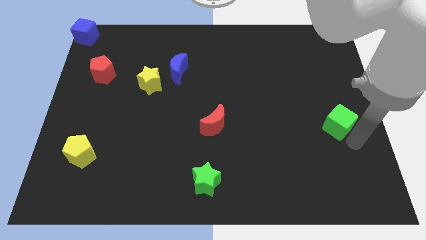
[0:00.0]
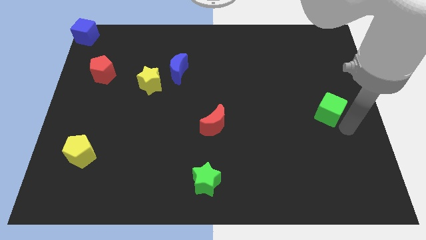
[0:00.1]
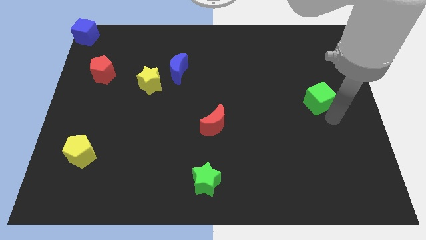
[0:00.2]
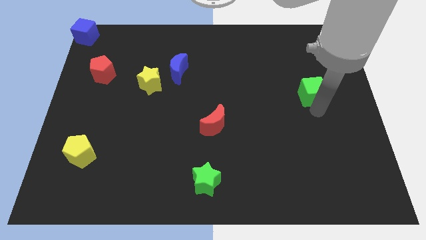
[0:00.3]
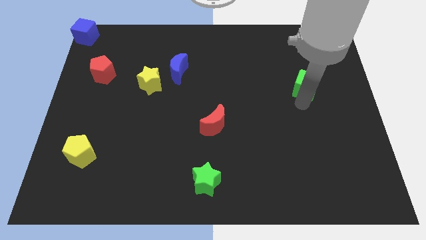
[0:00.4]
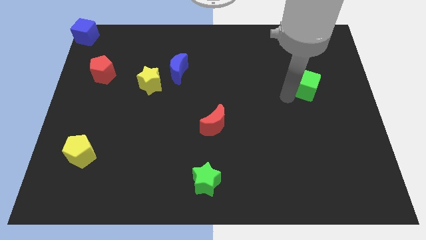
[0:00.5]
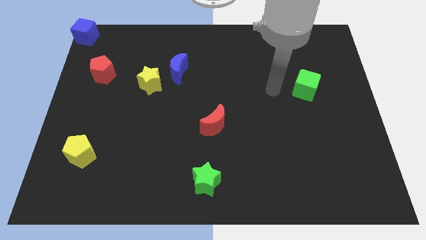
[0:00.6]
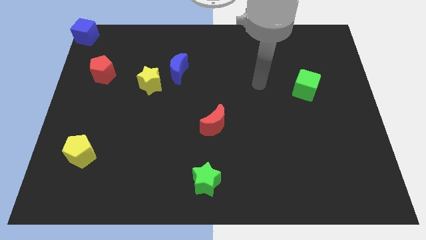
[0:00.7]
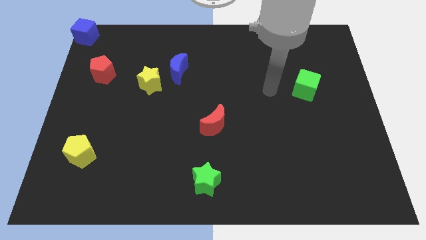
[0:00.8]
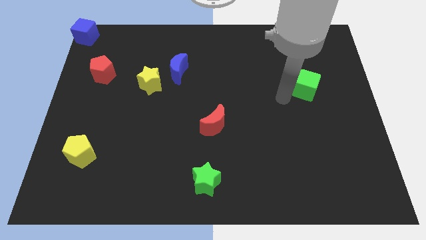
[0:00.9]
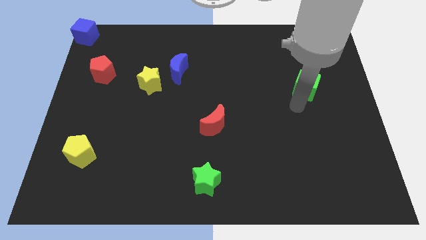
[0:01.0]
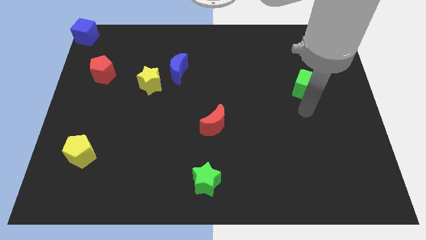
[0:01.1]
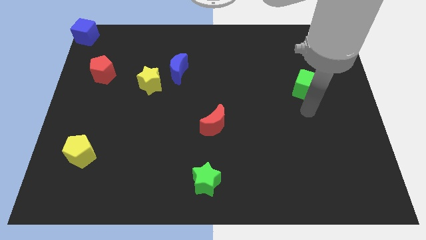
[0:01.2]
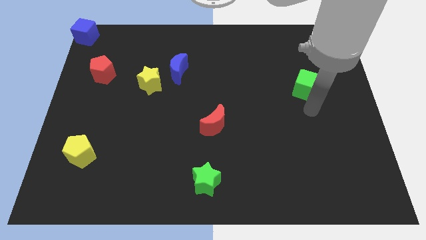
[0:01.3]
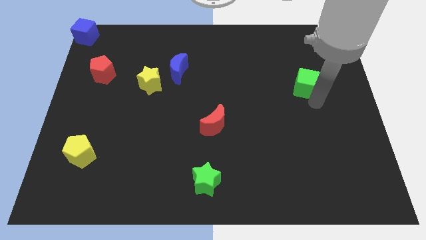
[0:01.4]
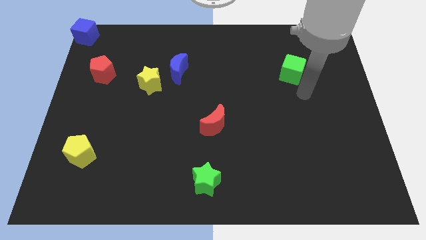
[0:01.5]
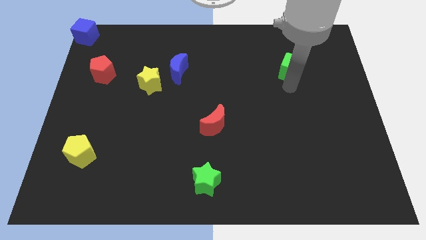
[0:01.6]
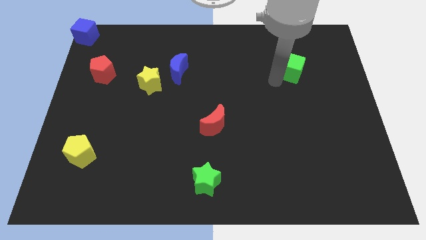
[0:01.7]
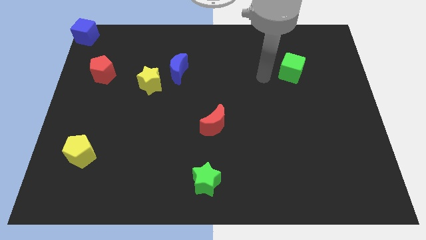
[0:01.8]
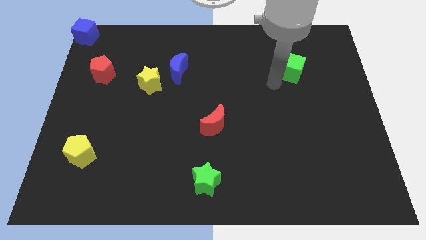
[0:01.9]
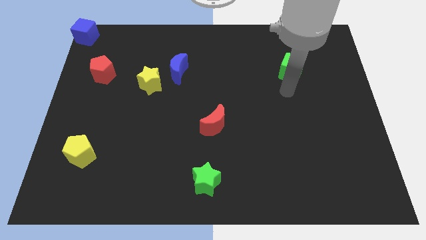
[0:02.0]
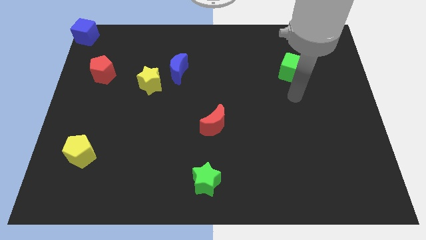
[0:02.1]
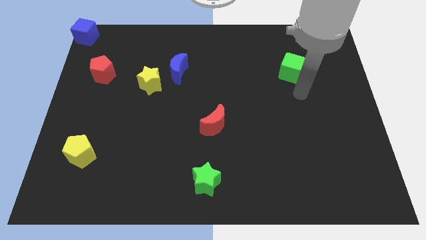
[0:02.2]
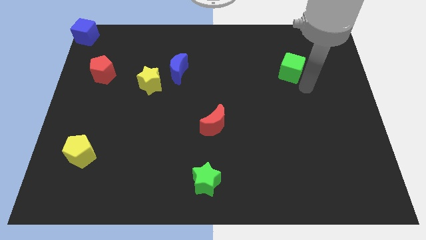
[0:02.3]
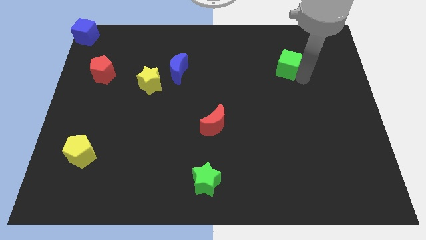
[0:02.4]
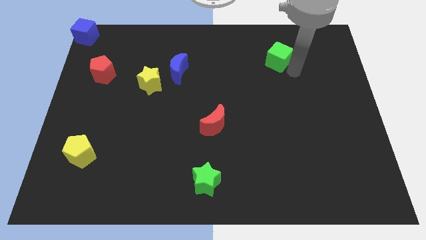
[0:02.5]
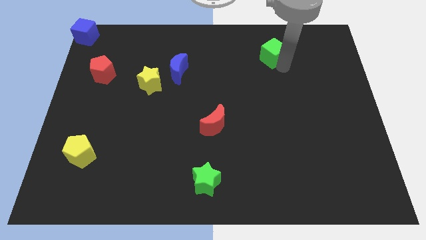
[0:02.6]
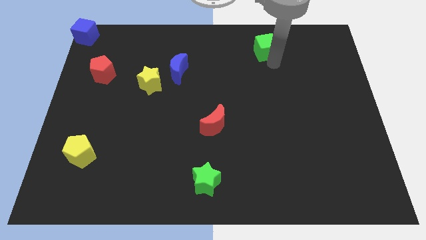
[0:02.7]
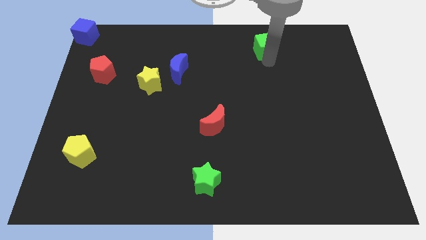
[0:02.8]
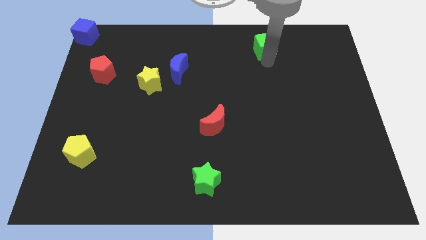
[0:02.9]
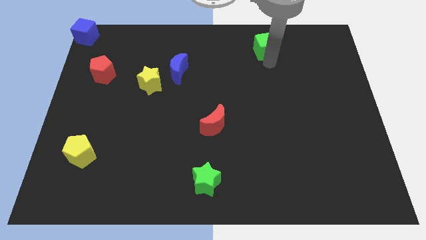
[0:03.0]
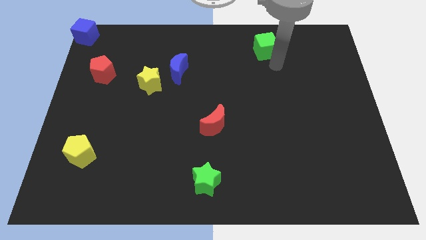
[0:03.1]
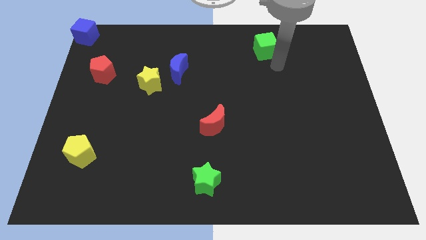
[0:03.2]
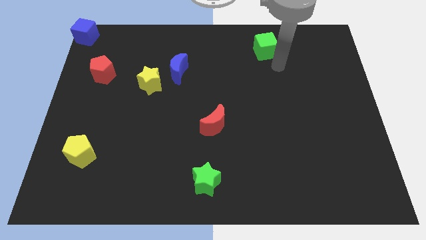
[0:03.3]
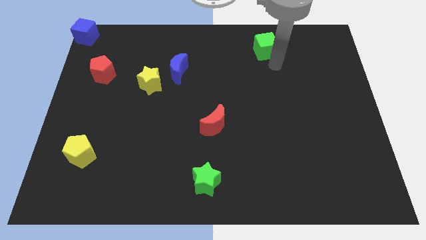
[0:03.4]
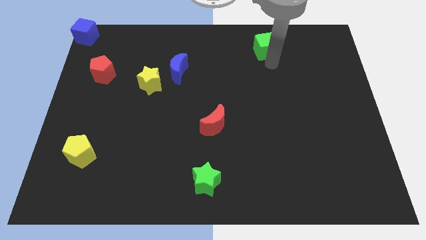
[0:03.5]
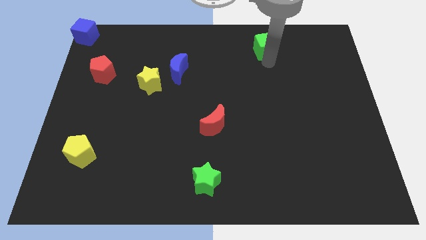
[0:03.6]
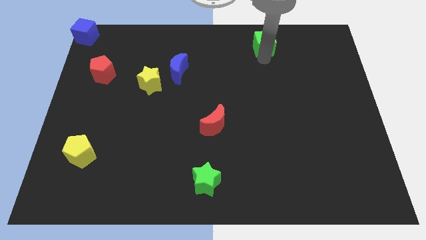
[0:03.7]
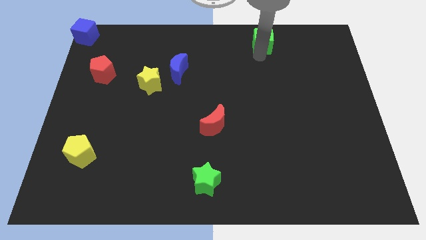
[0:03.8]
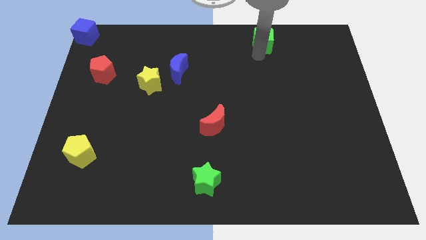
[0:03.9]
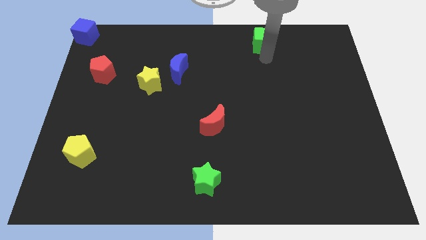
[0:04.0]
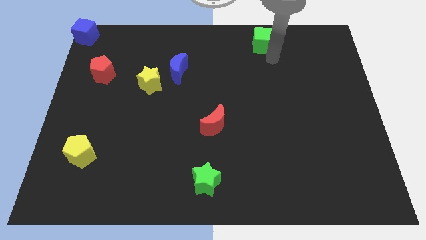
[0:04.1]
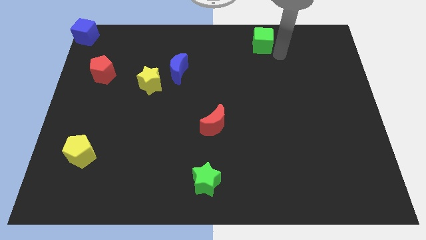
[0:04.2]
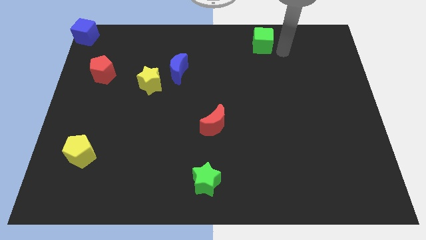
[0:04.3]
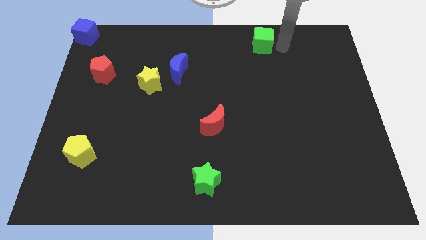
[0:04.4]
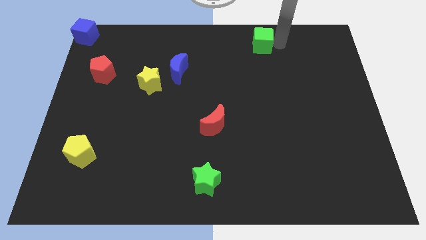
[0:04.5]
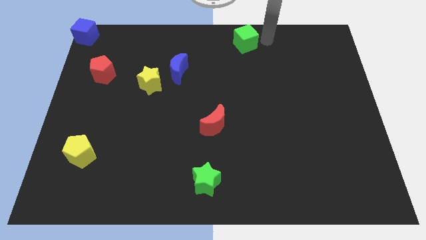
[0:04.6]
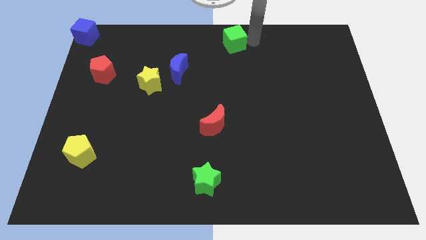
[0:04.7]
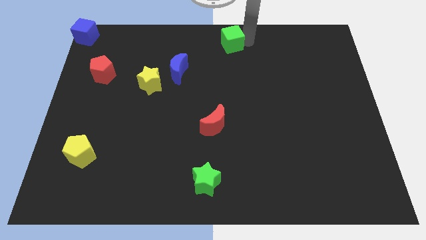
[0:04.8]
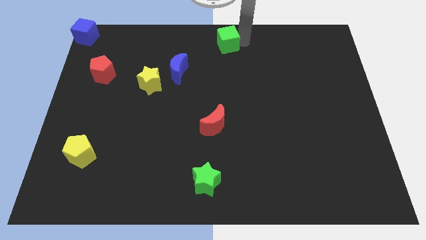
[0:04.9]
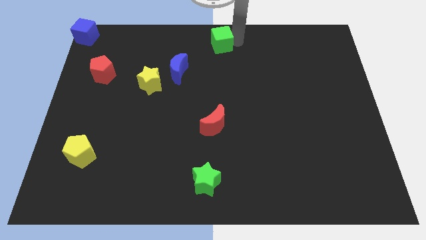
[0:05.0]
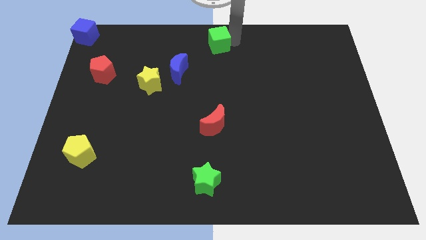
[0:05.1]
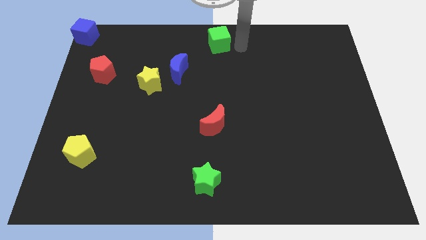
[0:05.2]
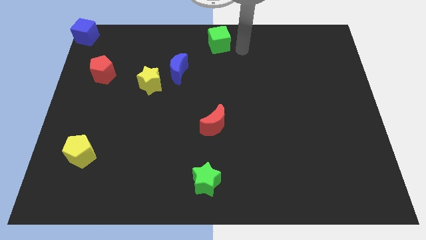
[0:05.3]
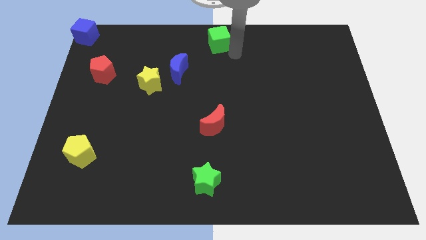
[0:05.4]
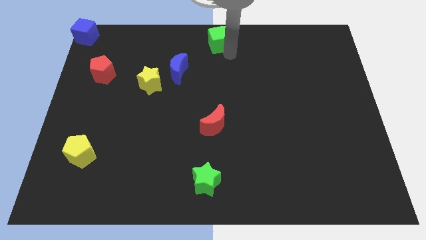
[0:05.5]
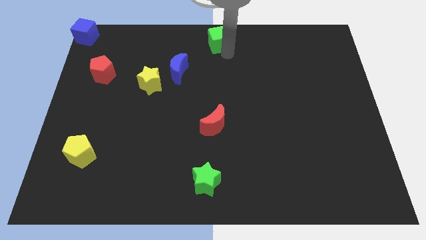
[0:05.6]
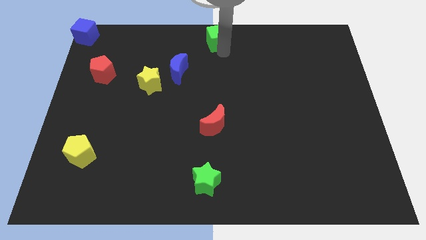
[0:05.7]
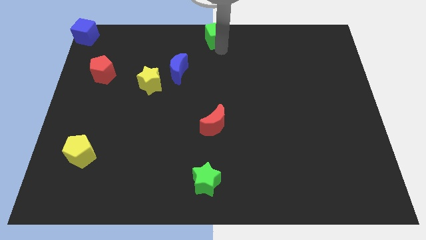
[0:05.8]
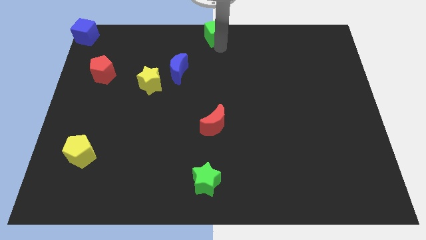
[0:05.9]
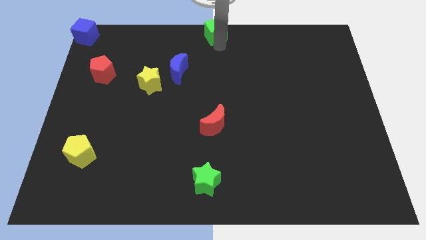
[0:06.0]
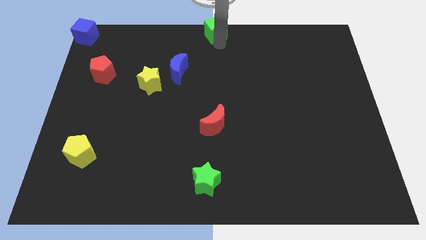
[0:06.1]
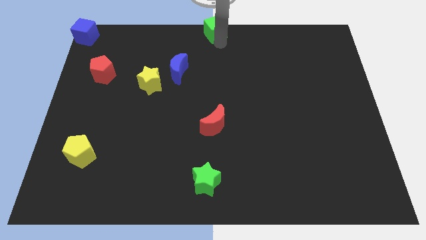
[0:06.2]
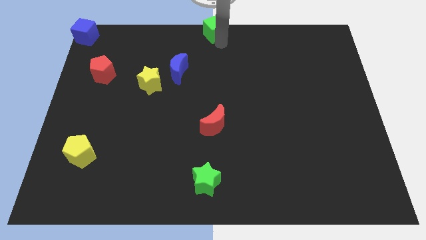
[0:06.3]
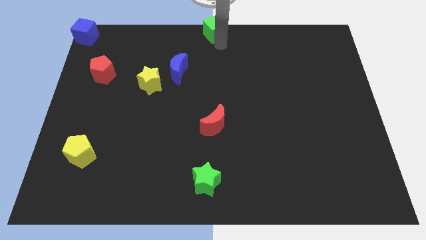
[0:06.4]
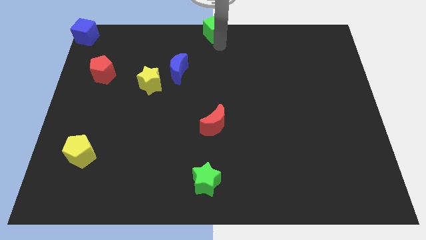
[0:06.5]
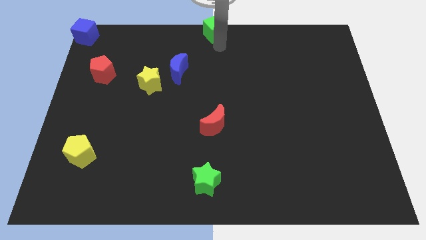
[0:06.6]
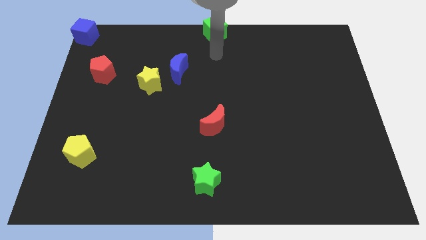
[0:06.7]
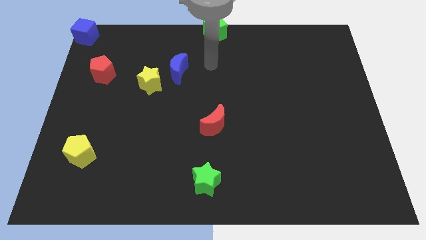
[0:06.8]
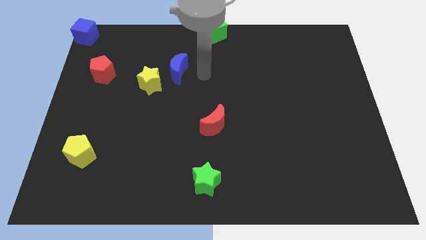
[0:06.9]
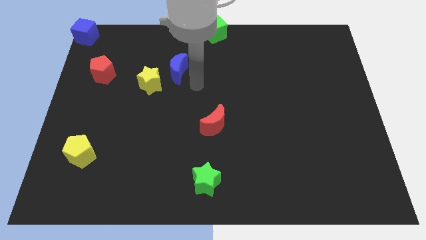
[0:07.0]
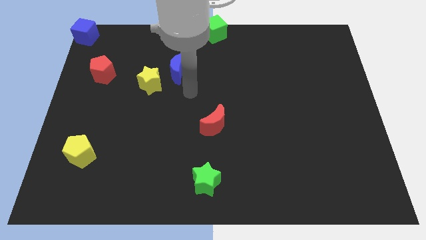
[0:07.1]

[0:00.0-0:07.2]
place the green cube at the top cnetr of the board

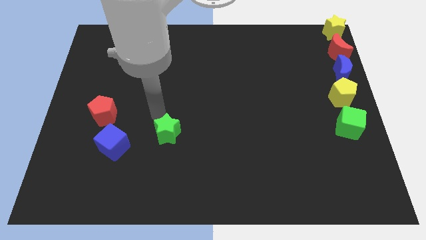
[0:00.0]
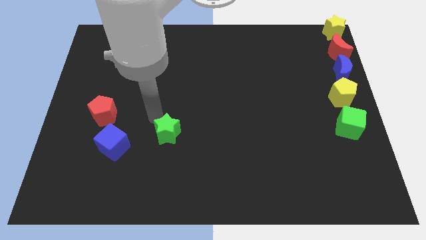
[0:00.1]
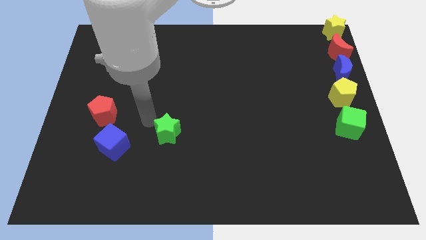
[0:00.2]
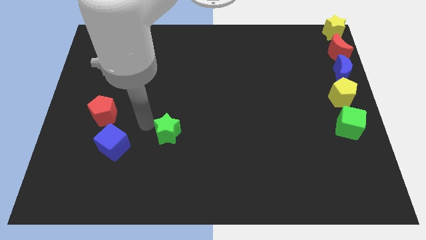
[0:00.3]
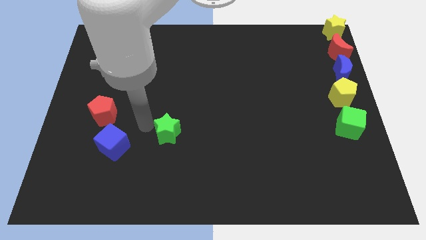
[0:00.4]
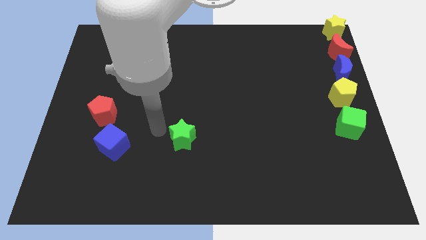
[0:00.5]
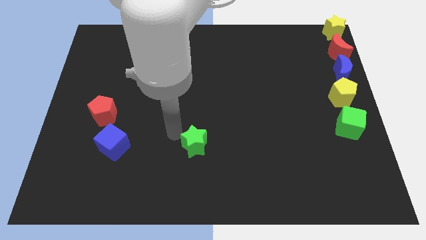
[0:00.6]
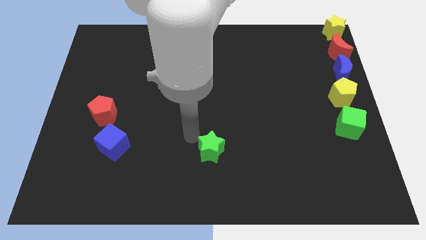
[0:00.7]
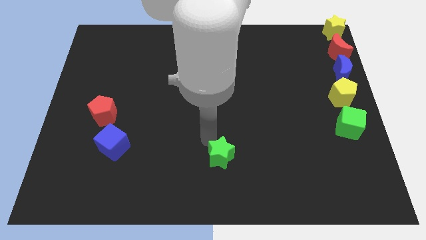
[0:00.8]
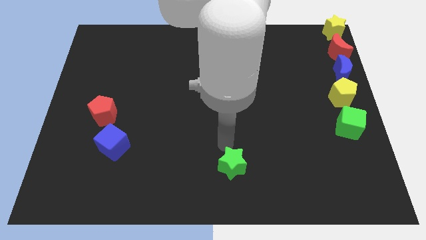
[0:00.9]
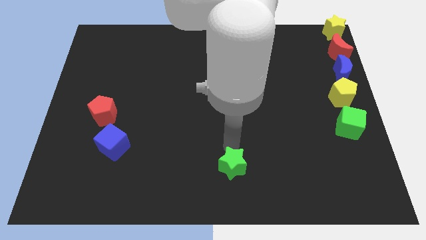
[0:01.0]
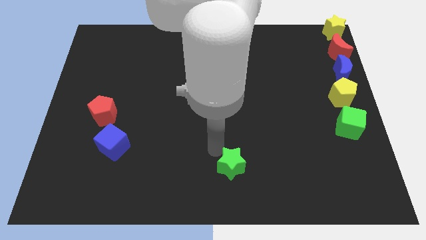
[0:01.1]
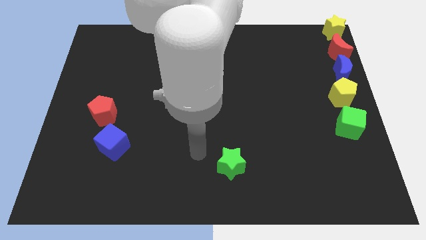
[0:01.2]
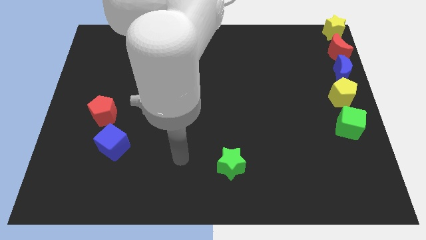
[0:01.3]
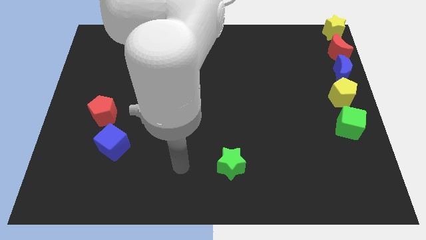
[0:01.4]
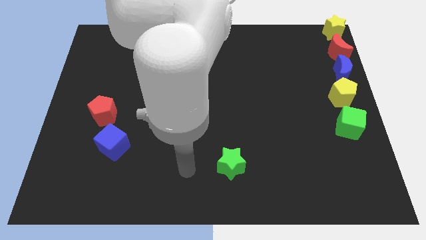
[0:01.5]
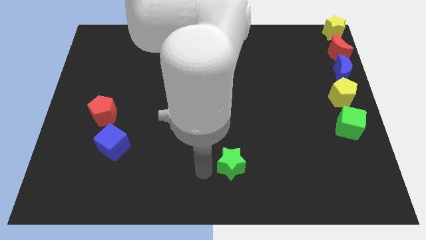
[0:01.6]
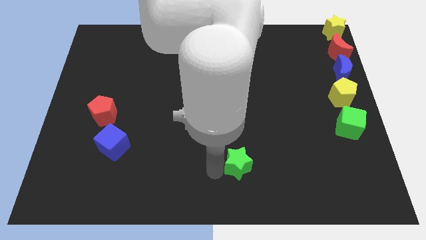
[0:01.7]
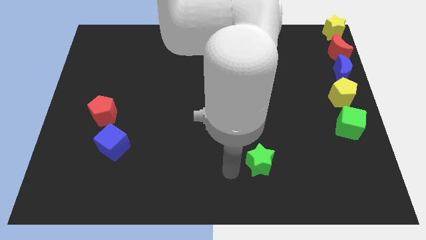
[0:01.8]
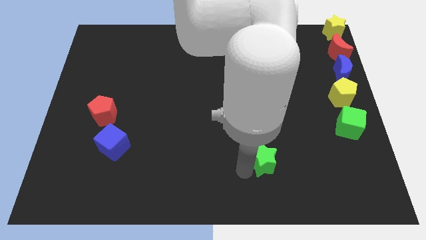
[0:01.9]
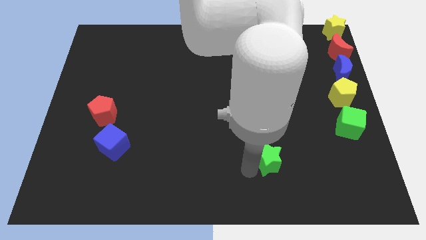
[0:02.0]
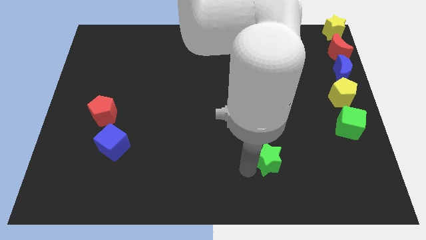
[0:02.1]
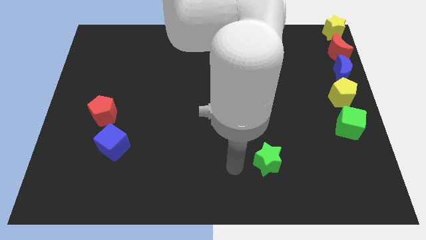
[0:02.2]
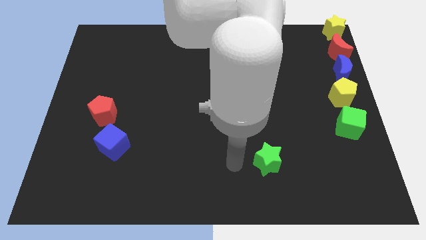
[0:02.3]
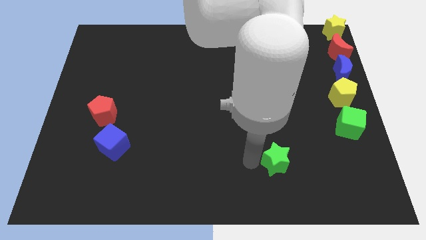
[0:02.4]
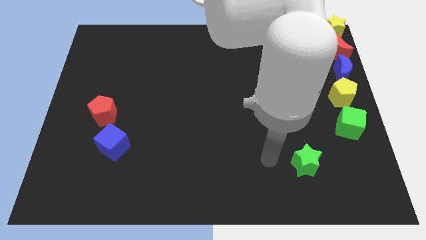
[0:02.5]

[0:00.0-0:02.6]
move the green star diagonally to the green cube
